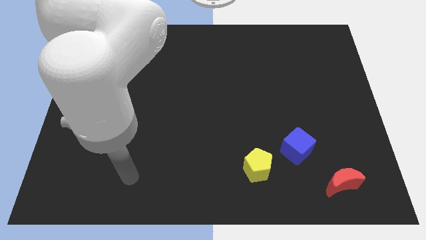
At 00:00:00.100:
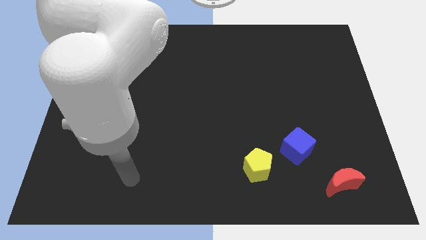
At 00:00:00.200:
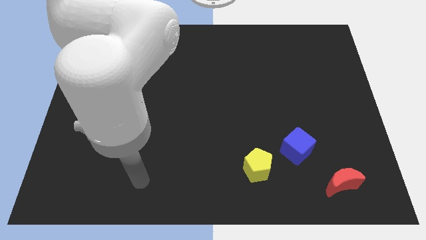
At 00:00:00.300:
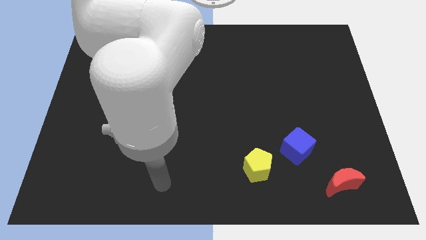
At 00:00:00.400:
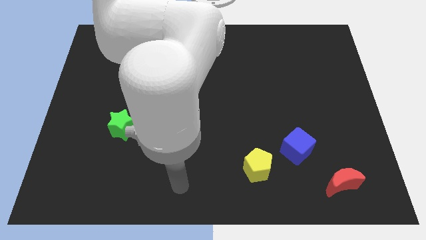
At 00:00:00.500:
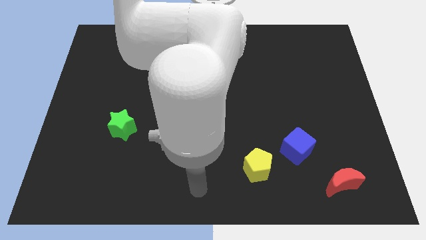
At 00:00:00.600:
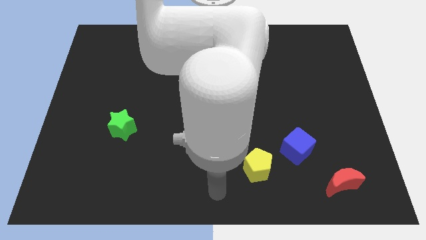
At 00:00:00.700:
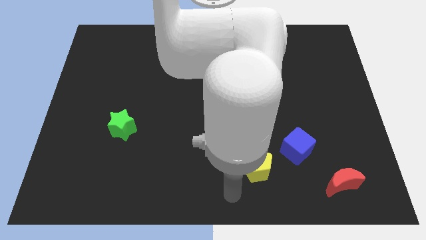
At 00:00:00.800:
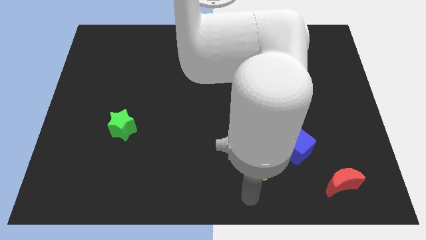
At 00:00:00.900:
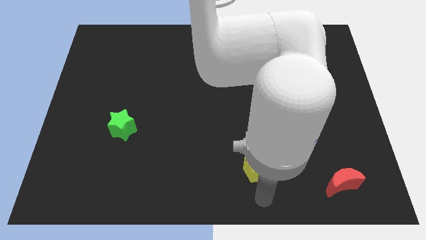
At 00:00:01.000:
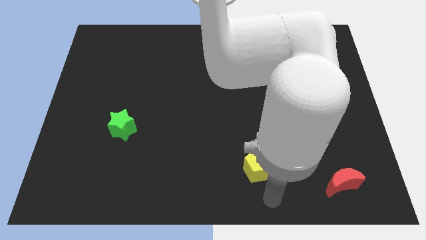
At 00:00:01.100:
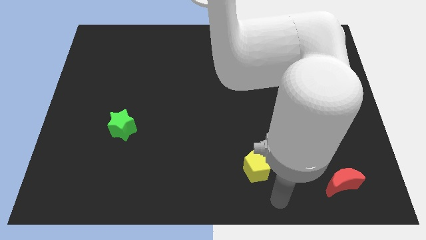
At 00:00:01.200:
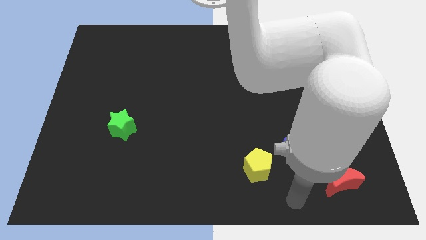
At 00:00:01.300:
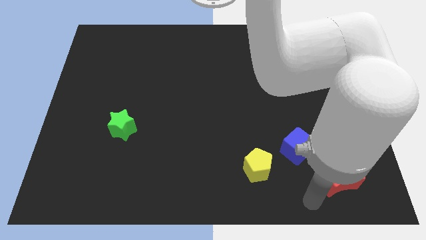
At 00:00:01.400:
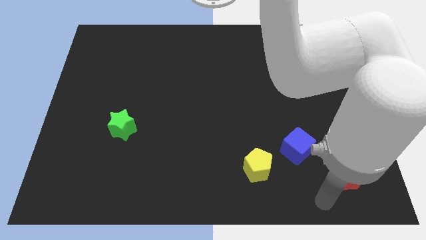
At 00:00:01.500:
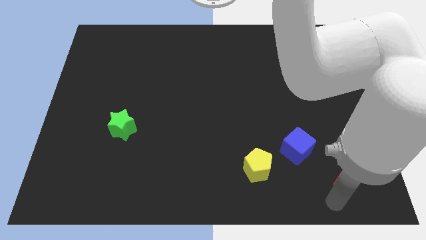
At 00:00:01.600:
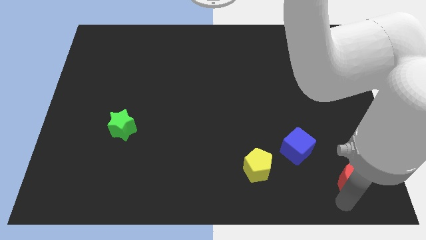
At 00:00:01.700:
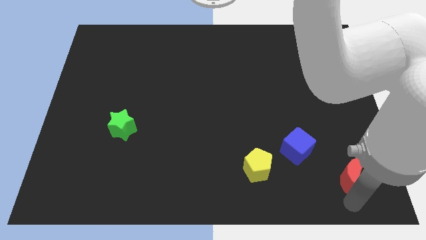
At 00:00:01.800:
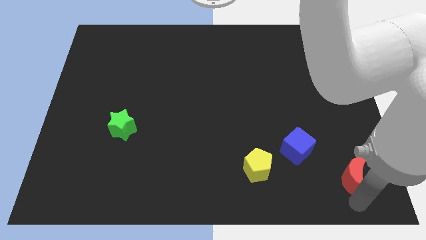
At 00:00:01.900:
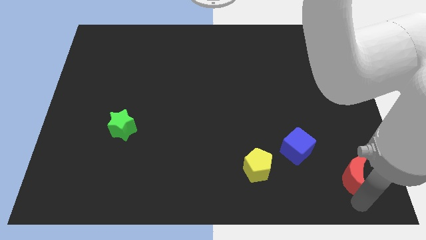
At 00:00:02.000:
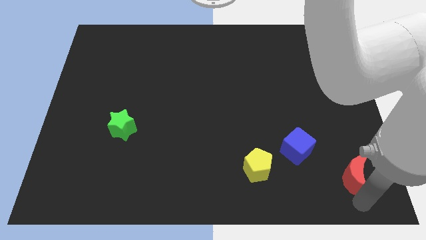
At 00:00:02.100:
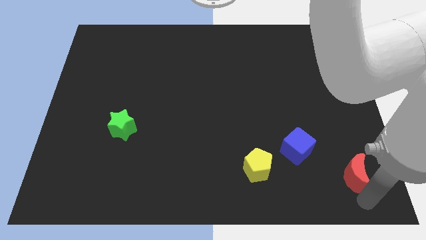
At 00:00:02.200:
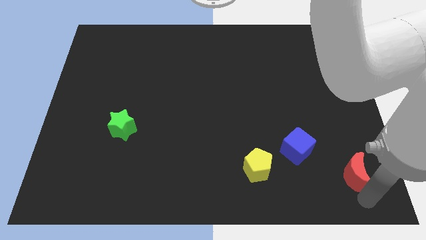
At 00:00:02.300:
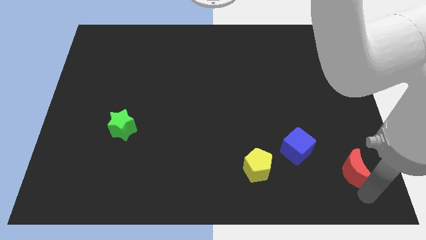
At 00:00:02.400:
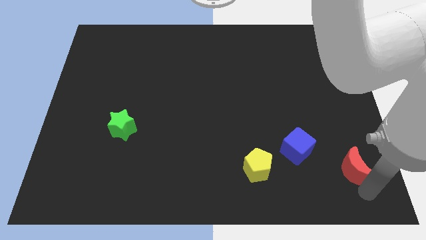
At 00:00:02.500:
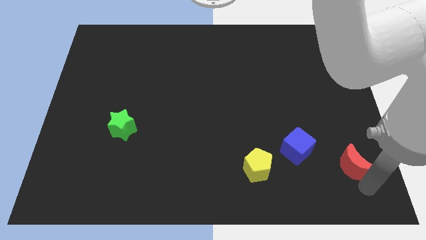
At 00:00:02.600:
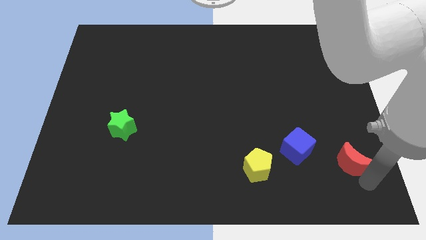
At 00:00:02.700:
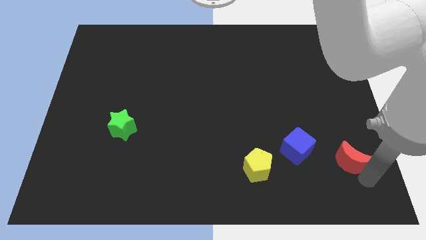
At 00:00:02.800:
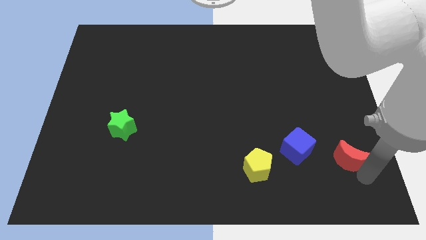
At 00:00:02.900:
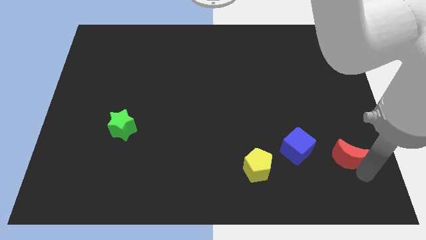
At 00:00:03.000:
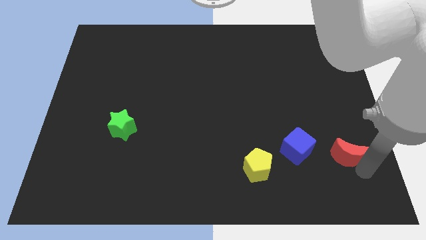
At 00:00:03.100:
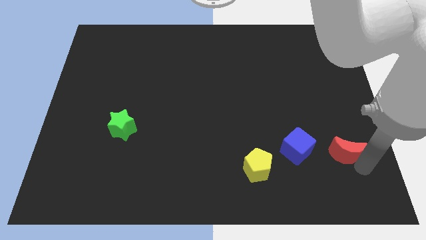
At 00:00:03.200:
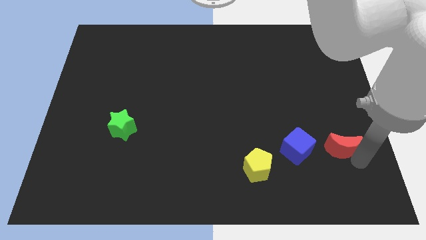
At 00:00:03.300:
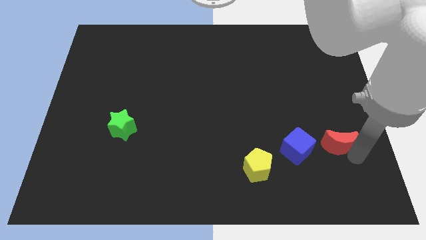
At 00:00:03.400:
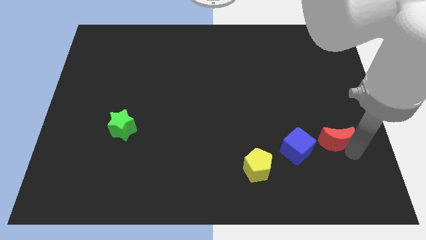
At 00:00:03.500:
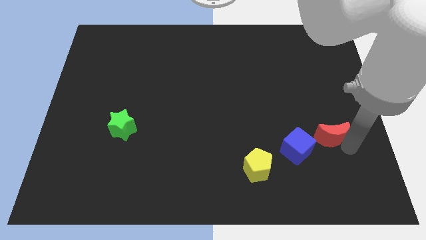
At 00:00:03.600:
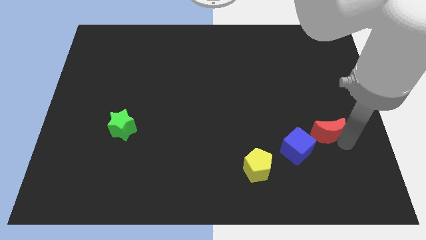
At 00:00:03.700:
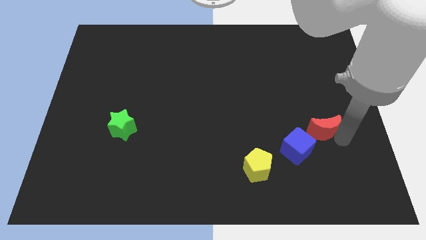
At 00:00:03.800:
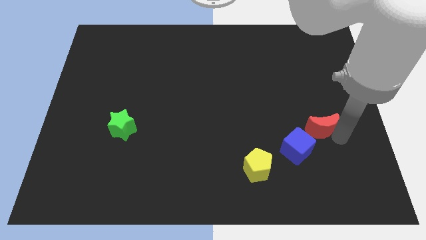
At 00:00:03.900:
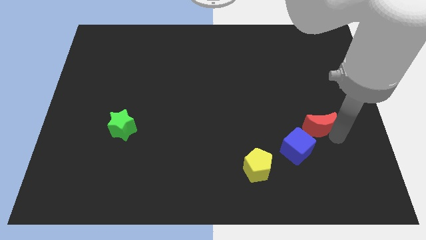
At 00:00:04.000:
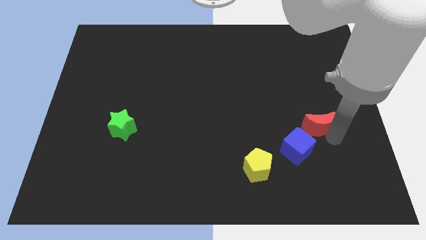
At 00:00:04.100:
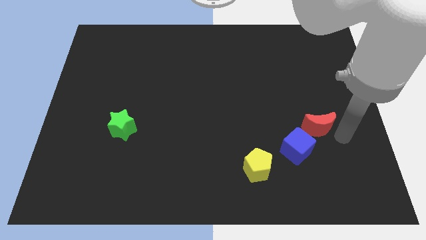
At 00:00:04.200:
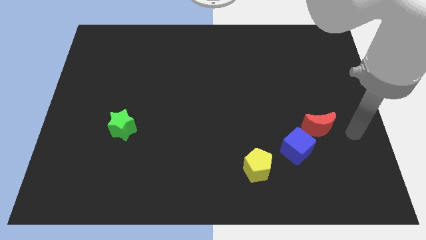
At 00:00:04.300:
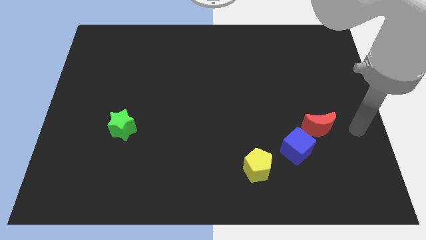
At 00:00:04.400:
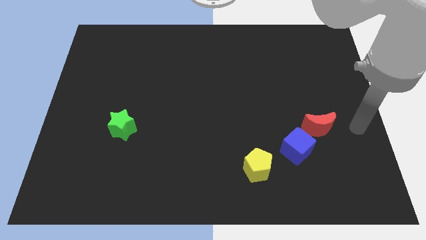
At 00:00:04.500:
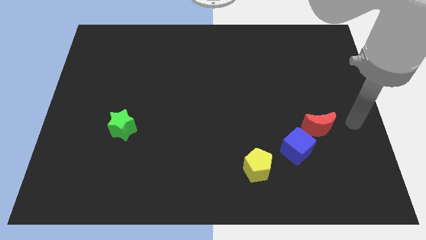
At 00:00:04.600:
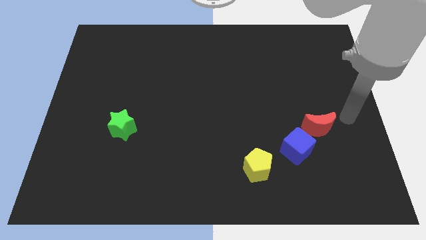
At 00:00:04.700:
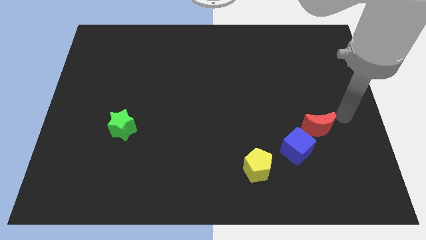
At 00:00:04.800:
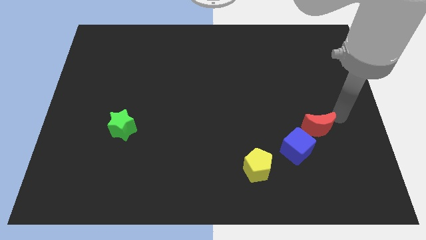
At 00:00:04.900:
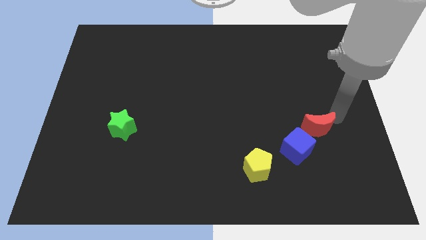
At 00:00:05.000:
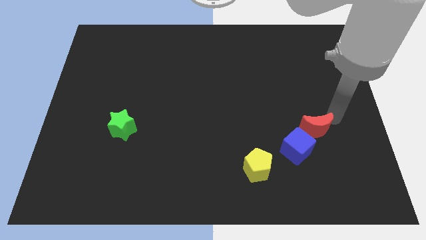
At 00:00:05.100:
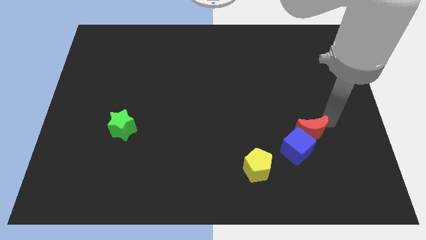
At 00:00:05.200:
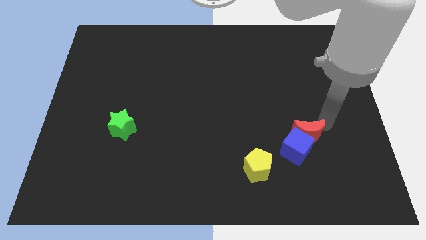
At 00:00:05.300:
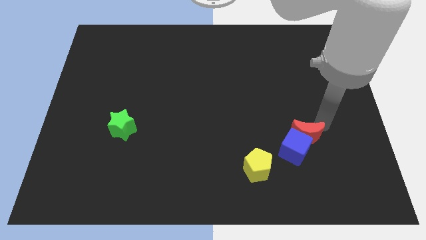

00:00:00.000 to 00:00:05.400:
put the red block to the cube

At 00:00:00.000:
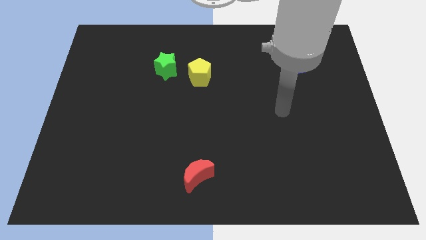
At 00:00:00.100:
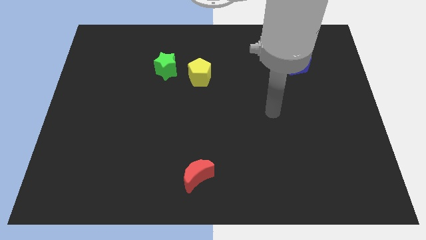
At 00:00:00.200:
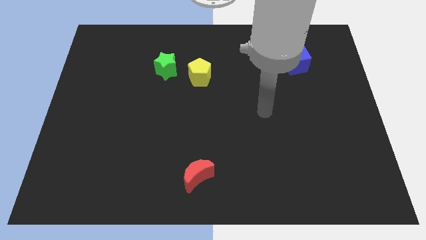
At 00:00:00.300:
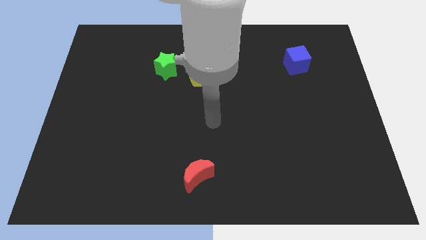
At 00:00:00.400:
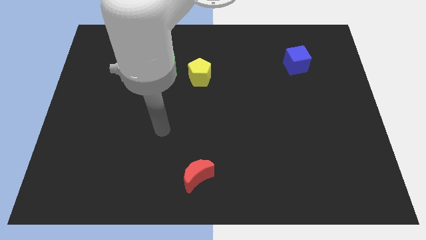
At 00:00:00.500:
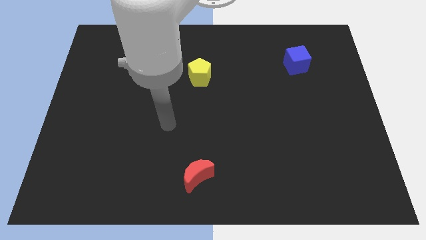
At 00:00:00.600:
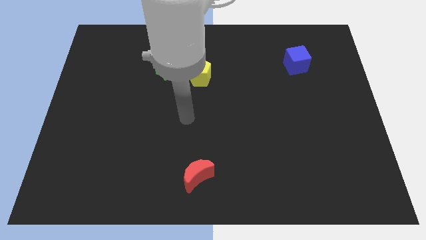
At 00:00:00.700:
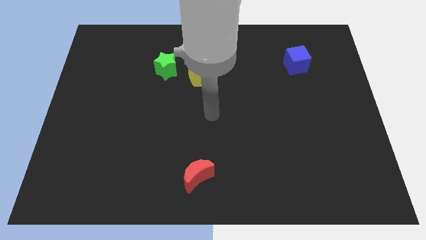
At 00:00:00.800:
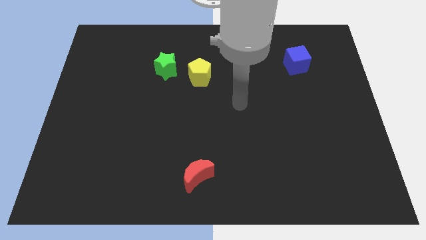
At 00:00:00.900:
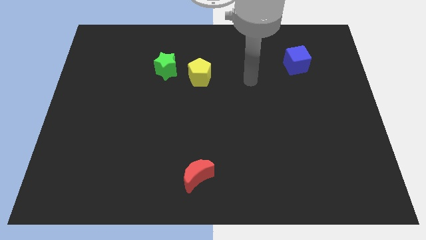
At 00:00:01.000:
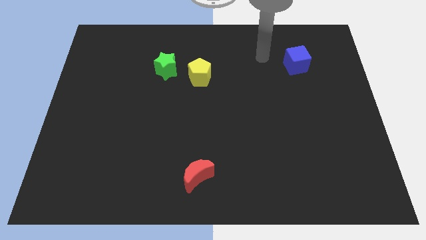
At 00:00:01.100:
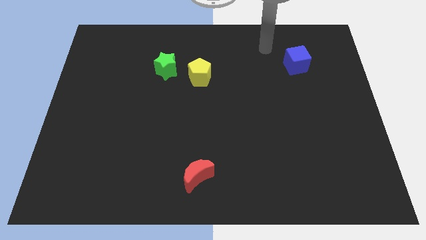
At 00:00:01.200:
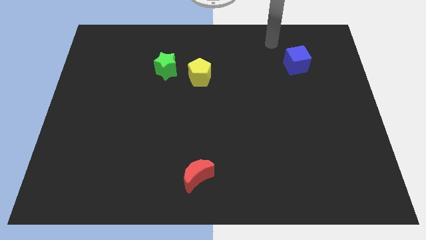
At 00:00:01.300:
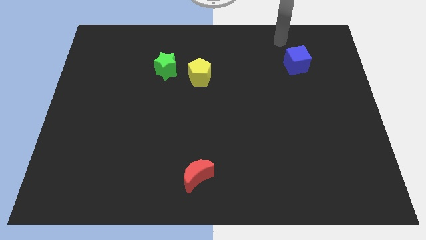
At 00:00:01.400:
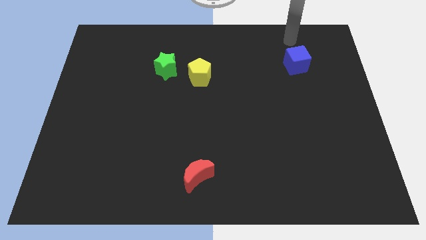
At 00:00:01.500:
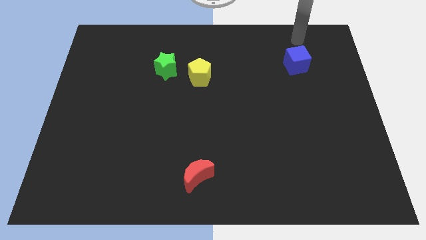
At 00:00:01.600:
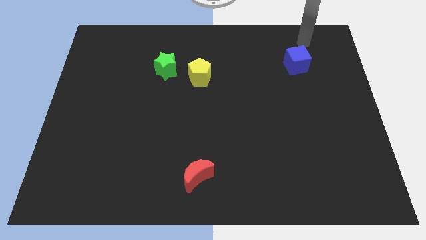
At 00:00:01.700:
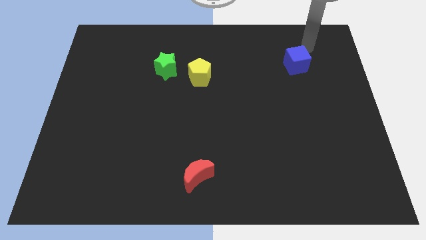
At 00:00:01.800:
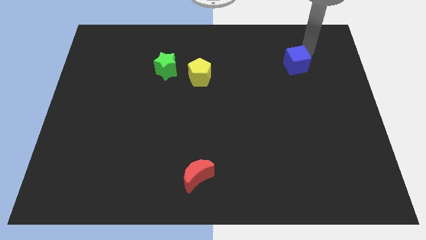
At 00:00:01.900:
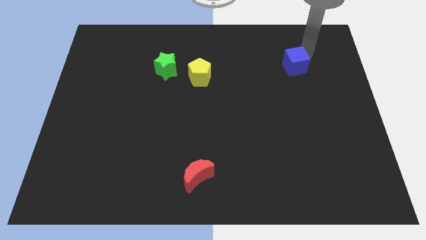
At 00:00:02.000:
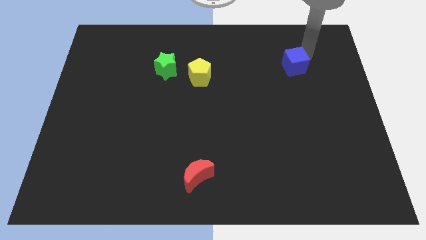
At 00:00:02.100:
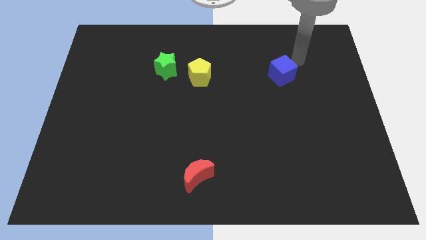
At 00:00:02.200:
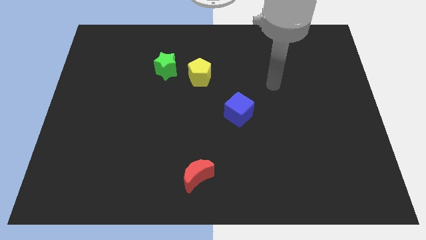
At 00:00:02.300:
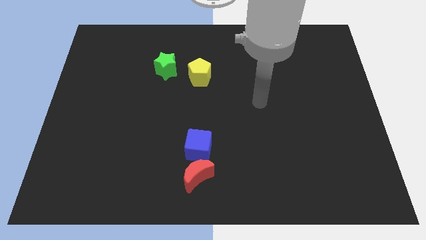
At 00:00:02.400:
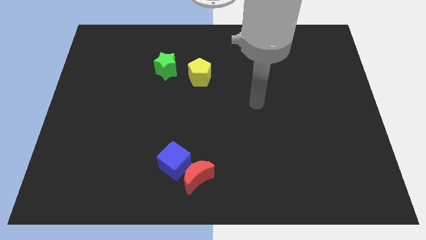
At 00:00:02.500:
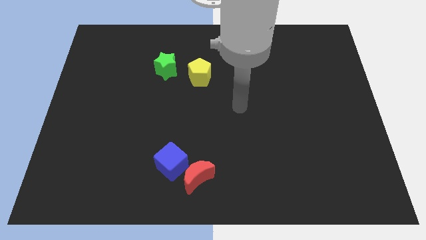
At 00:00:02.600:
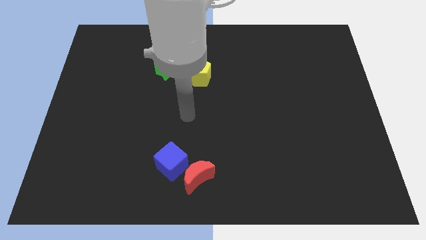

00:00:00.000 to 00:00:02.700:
push the blue block next to the red block

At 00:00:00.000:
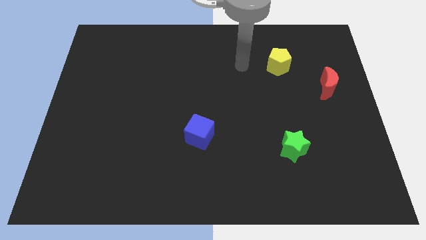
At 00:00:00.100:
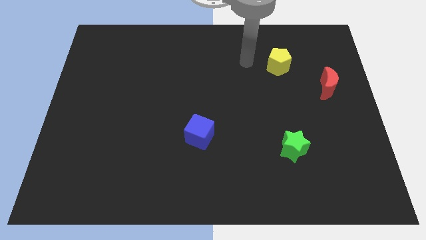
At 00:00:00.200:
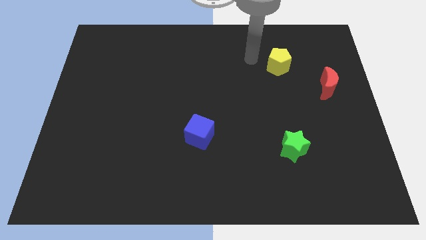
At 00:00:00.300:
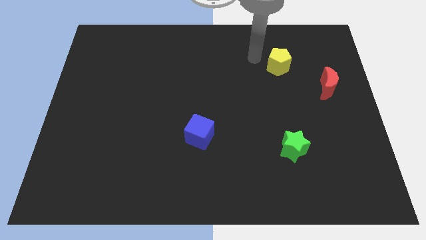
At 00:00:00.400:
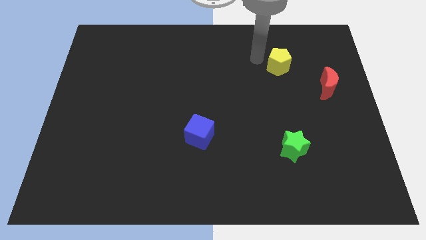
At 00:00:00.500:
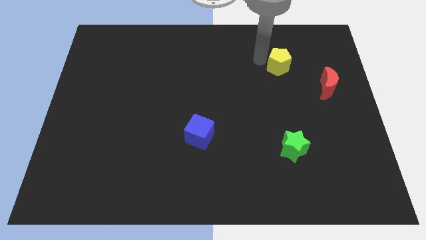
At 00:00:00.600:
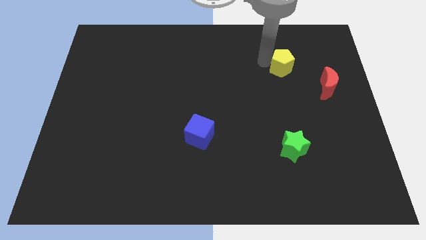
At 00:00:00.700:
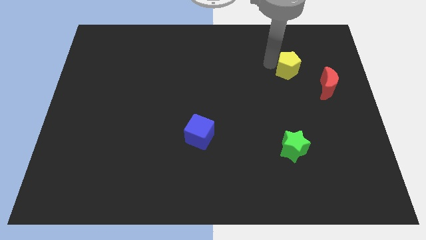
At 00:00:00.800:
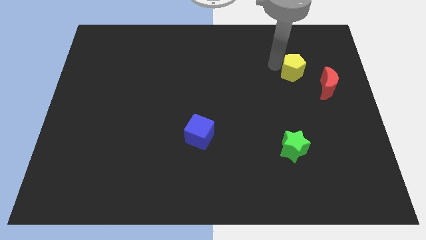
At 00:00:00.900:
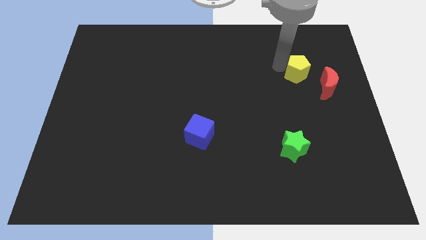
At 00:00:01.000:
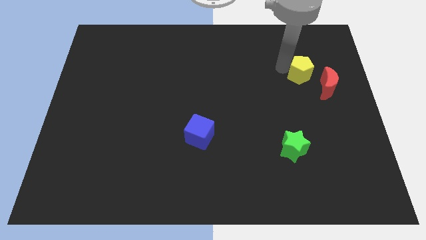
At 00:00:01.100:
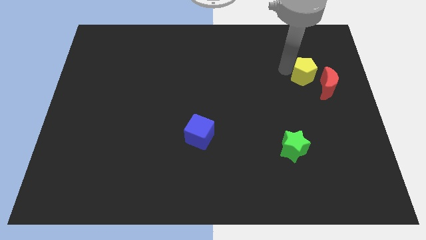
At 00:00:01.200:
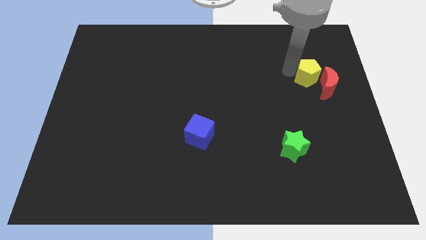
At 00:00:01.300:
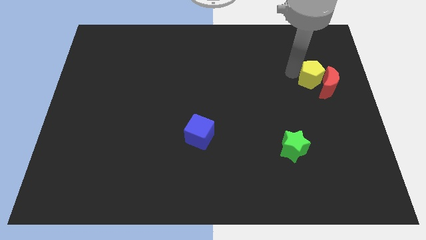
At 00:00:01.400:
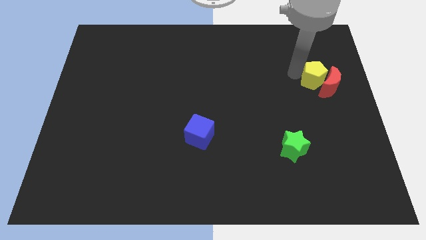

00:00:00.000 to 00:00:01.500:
slide the yellow pentagon close to the red block
